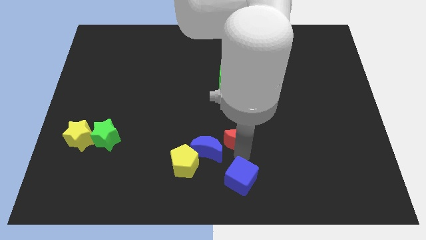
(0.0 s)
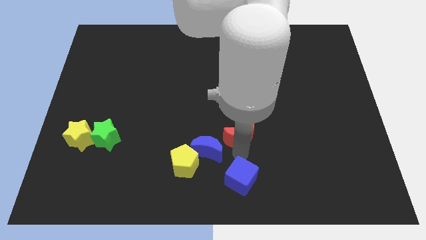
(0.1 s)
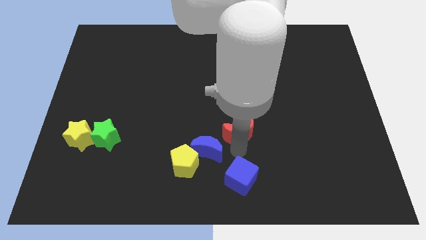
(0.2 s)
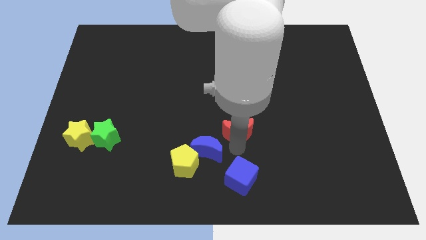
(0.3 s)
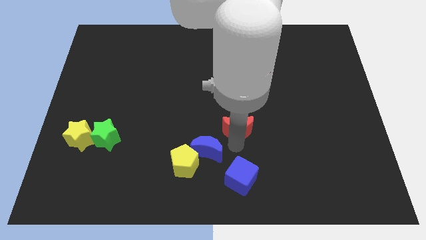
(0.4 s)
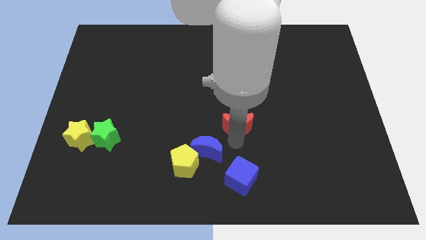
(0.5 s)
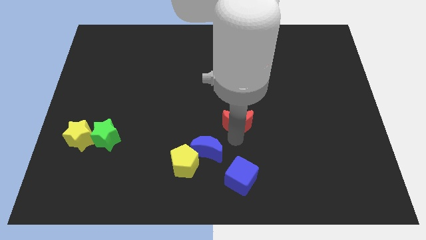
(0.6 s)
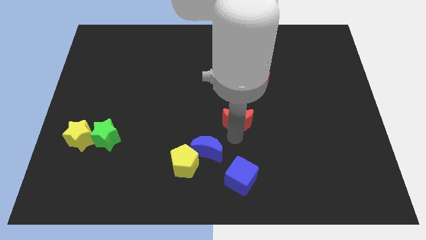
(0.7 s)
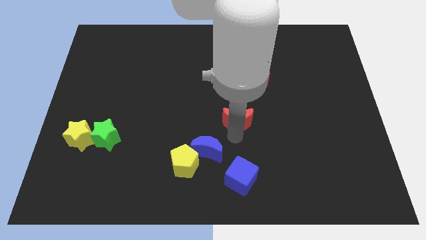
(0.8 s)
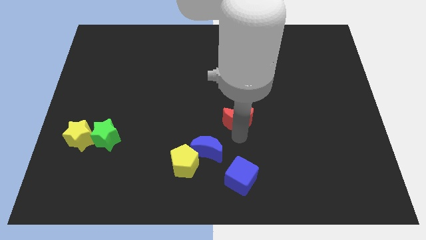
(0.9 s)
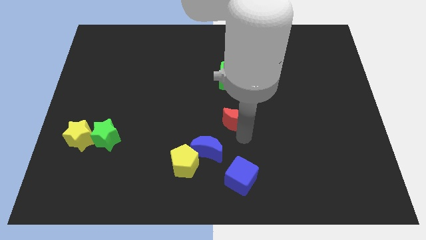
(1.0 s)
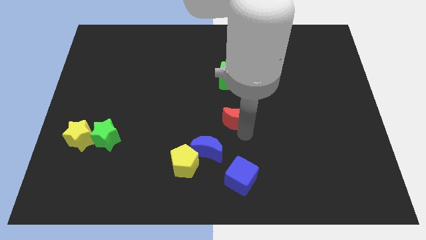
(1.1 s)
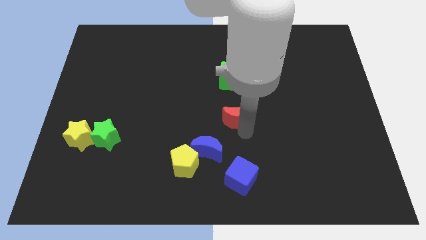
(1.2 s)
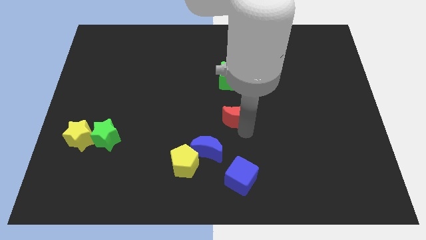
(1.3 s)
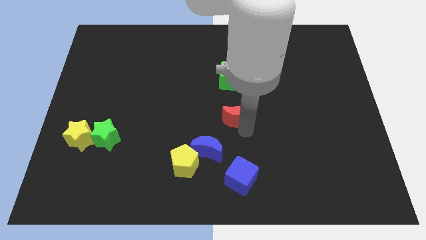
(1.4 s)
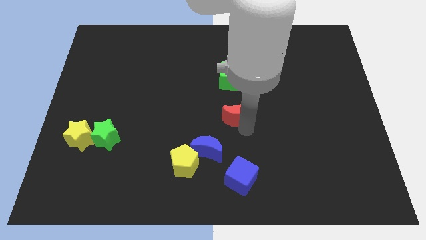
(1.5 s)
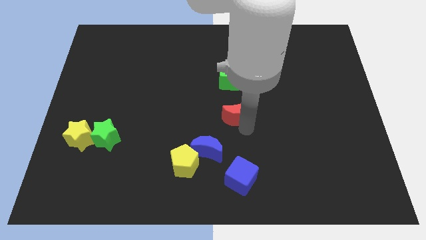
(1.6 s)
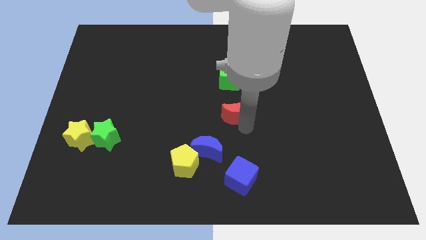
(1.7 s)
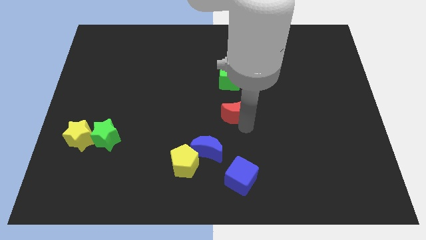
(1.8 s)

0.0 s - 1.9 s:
slide the red crescent towards the green cube

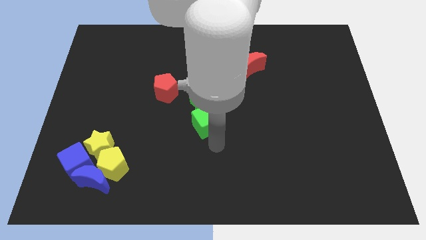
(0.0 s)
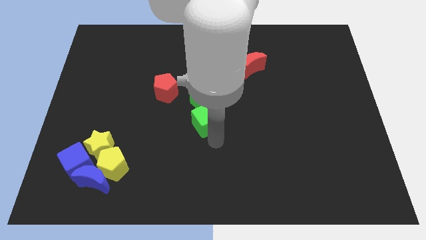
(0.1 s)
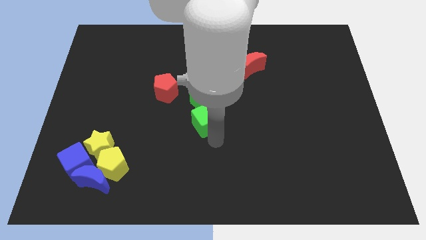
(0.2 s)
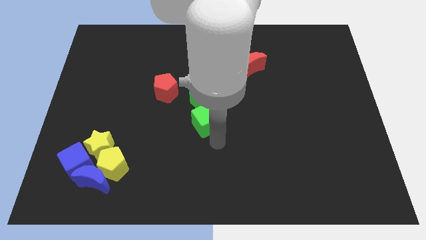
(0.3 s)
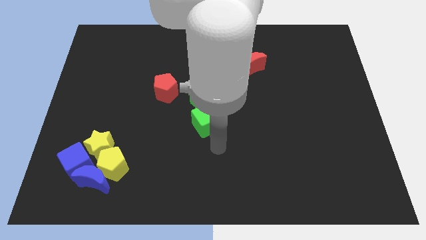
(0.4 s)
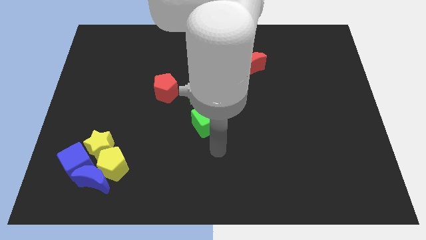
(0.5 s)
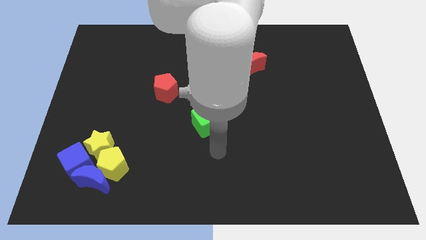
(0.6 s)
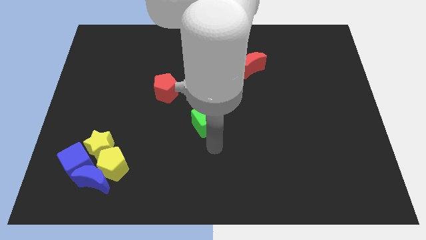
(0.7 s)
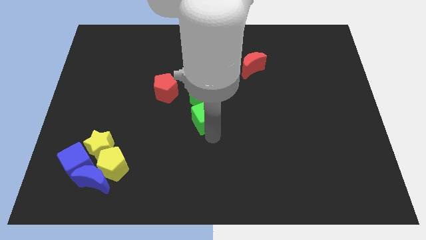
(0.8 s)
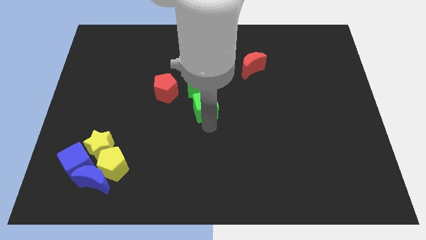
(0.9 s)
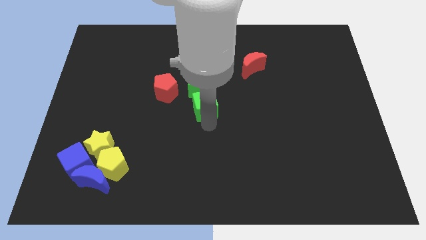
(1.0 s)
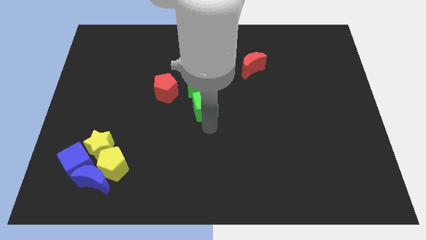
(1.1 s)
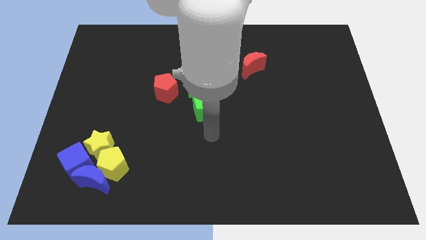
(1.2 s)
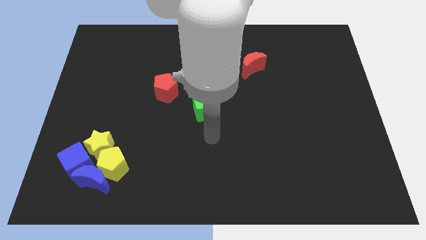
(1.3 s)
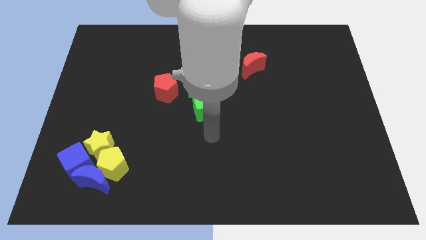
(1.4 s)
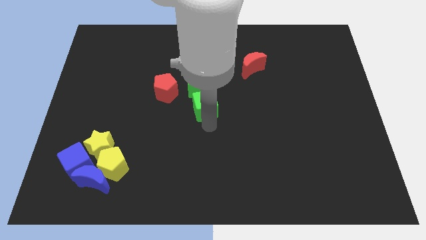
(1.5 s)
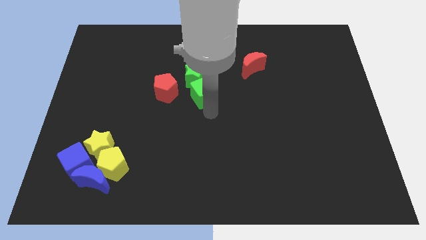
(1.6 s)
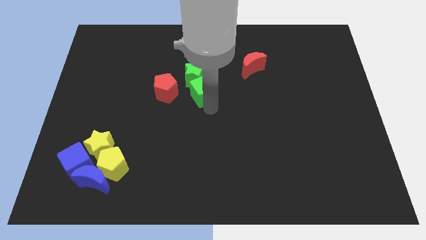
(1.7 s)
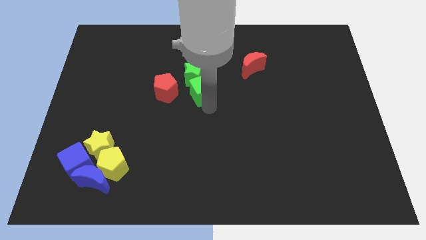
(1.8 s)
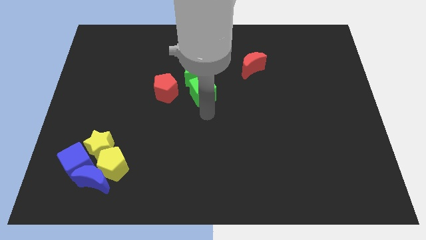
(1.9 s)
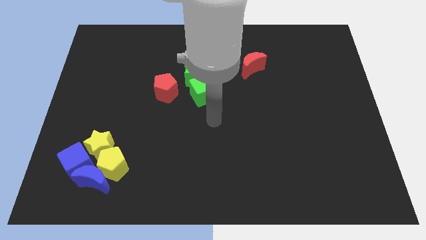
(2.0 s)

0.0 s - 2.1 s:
push the green cube into the green star

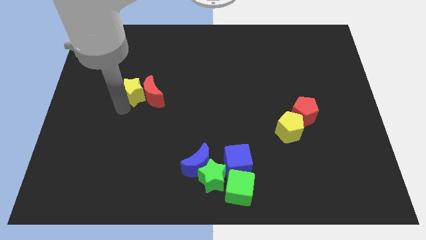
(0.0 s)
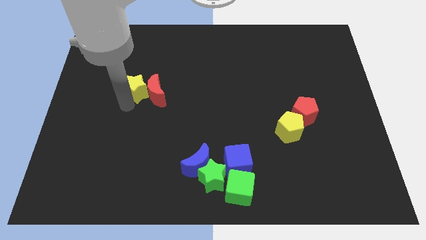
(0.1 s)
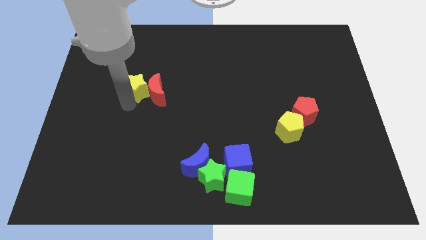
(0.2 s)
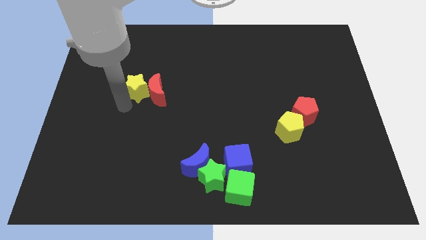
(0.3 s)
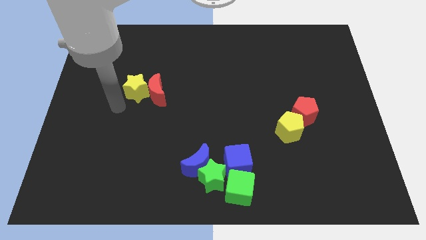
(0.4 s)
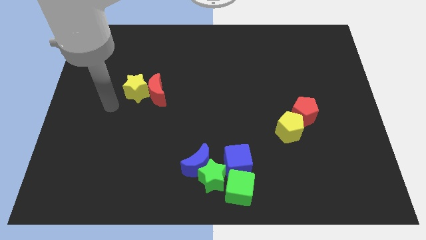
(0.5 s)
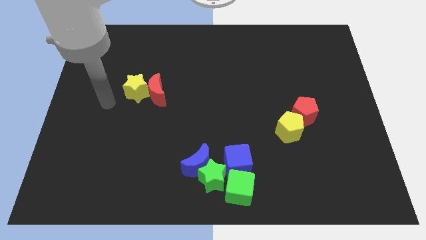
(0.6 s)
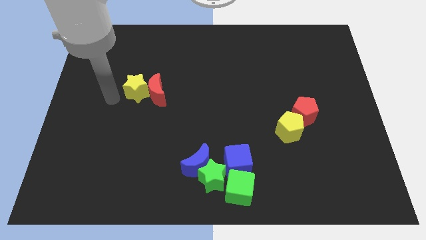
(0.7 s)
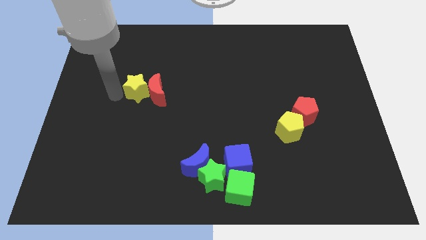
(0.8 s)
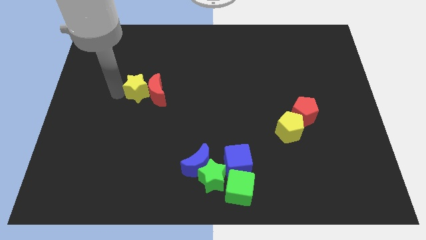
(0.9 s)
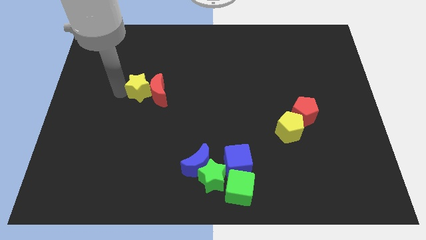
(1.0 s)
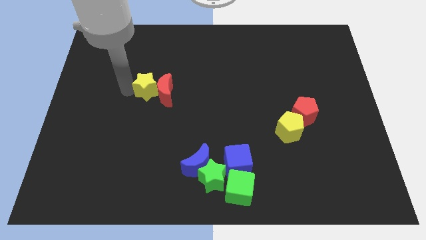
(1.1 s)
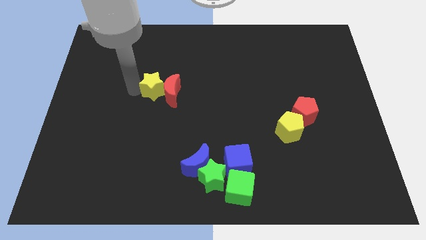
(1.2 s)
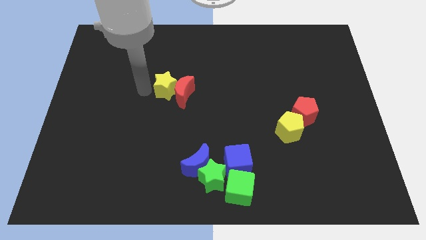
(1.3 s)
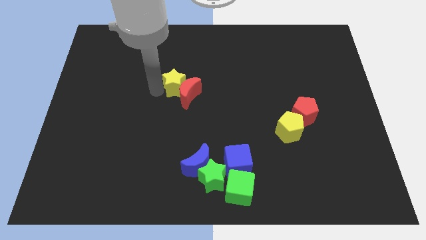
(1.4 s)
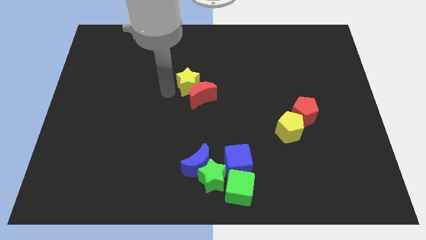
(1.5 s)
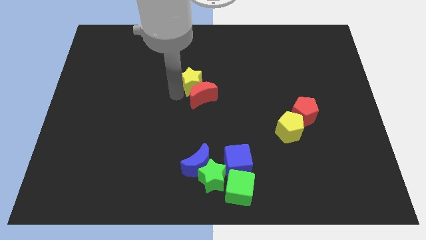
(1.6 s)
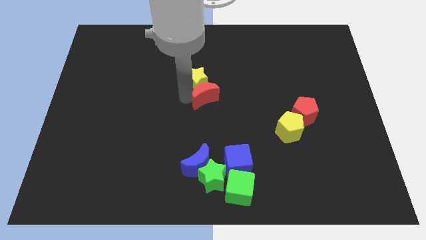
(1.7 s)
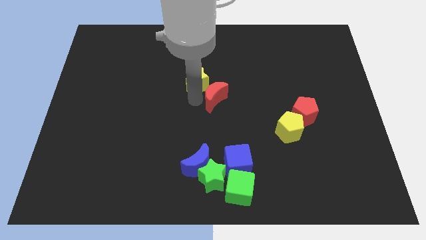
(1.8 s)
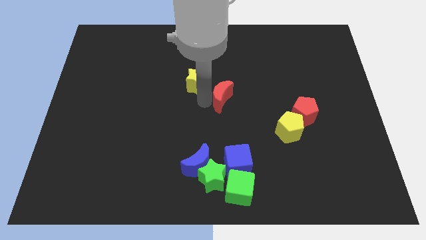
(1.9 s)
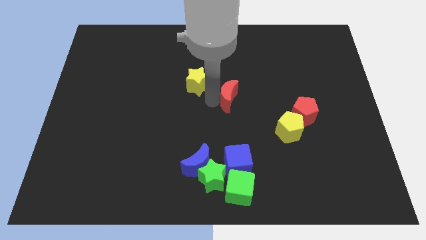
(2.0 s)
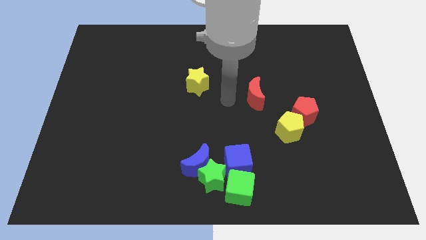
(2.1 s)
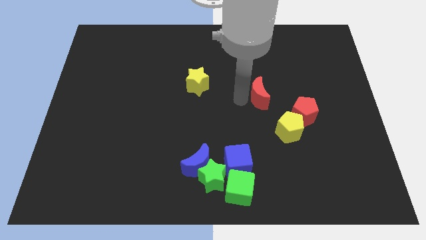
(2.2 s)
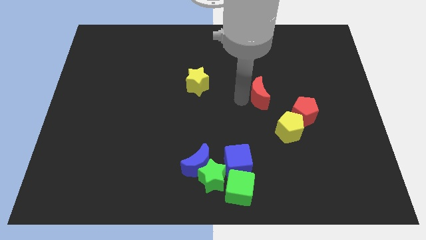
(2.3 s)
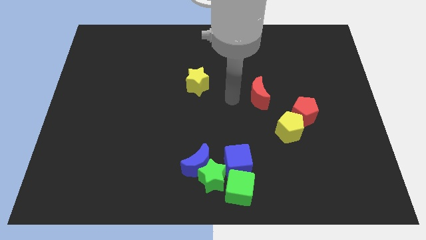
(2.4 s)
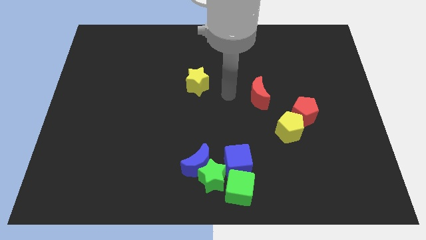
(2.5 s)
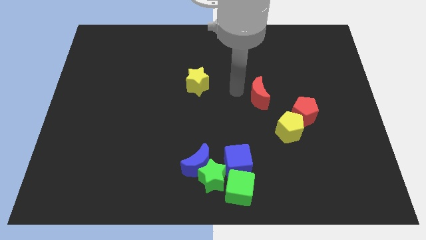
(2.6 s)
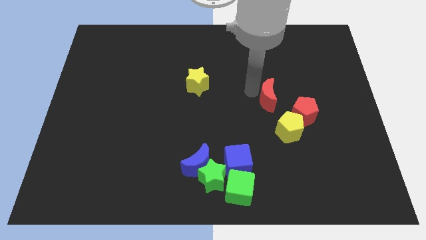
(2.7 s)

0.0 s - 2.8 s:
separate the red crescent from the yellow star

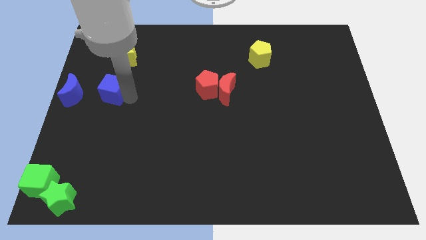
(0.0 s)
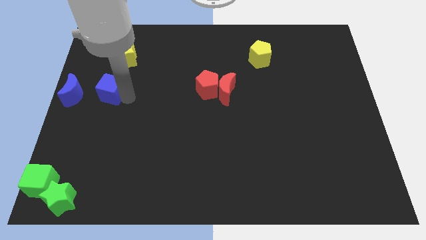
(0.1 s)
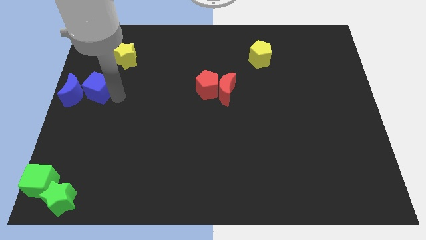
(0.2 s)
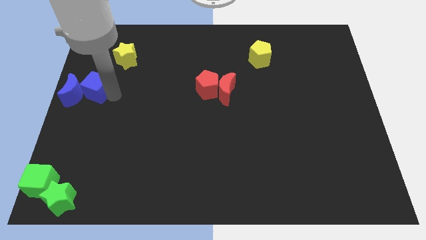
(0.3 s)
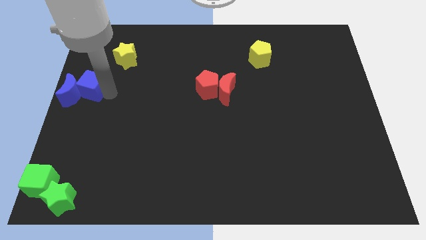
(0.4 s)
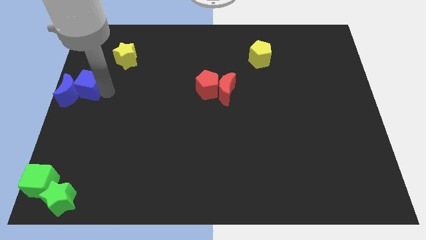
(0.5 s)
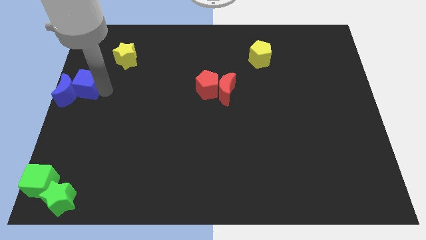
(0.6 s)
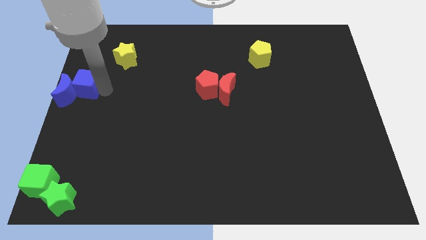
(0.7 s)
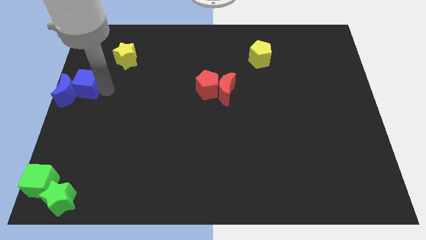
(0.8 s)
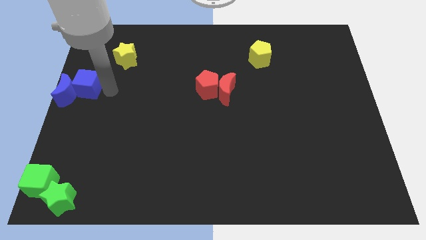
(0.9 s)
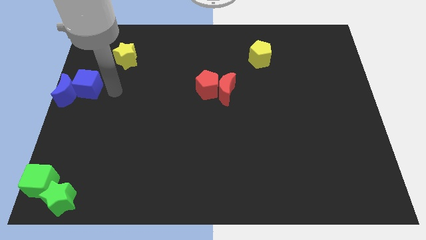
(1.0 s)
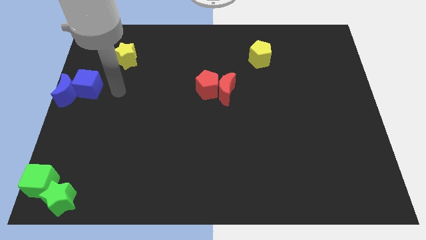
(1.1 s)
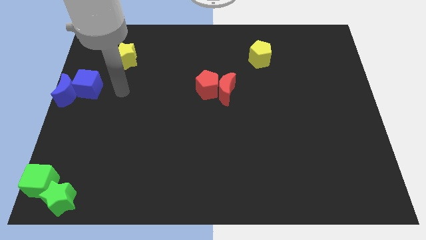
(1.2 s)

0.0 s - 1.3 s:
push blue cube into the blue half moon

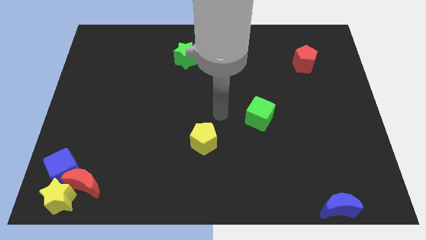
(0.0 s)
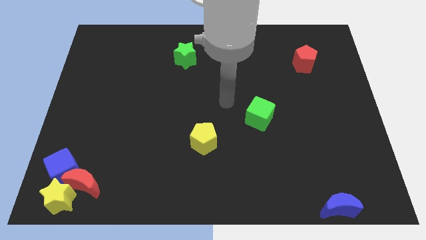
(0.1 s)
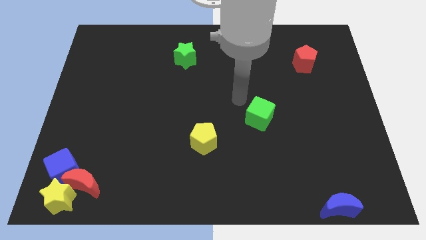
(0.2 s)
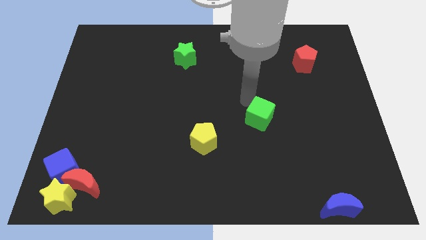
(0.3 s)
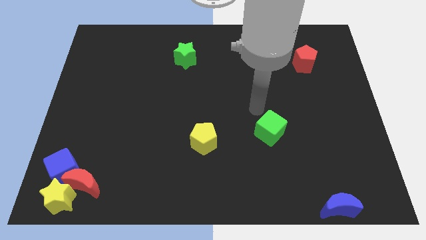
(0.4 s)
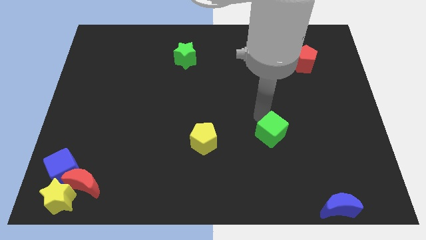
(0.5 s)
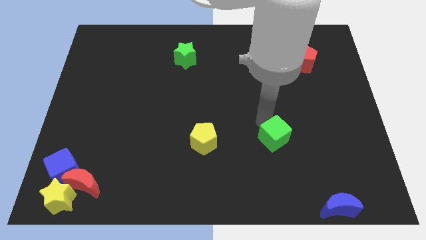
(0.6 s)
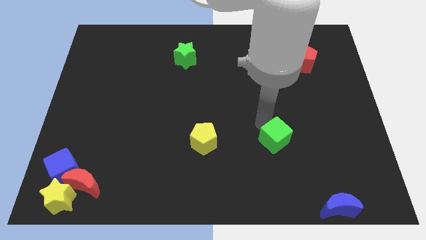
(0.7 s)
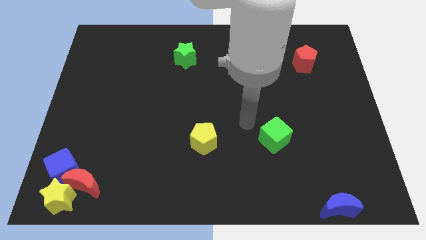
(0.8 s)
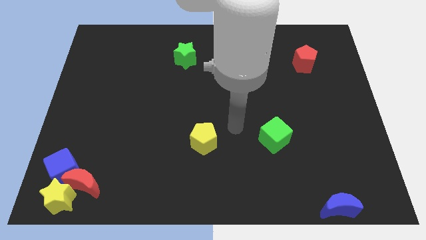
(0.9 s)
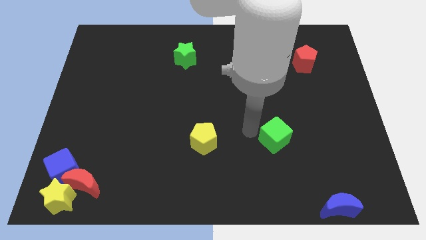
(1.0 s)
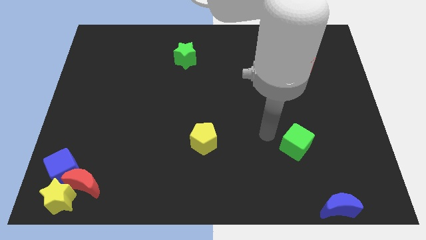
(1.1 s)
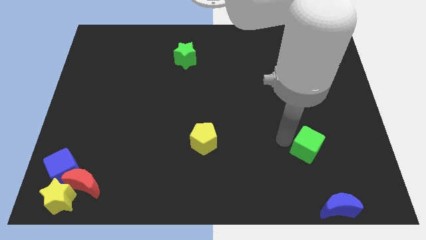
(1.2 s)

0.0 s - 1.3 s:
move the green cube towards blue crescent

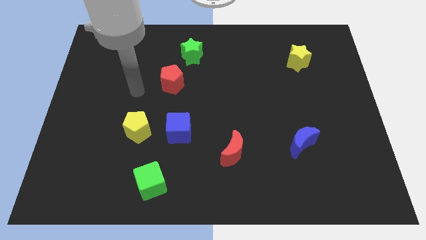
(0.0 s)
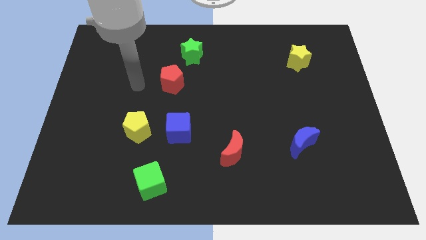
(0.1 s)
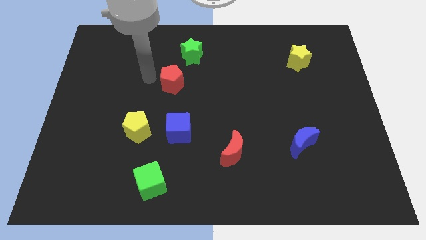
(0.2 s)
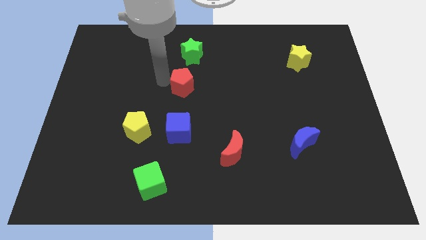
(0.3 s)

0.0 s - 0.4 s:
slightly move the red pentagon in between green star and blue cube
